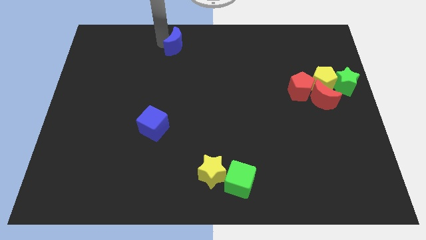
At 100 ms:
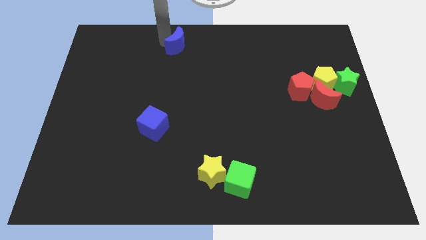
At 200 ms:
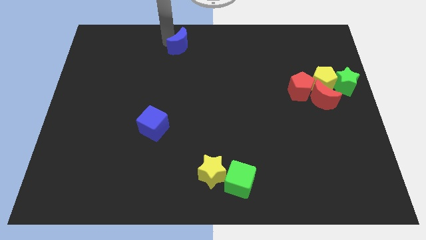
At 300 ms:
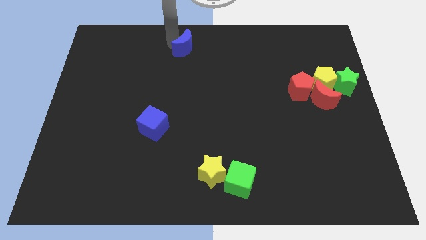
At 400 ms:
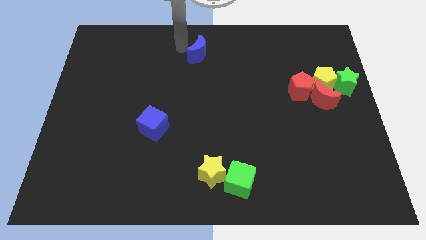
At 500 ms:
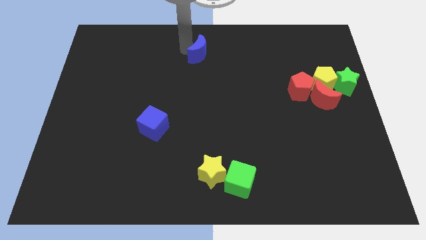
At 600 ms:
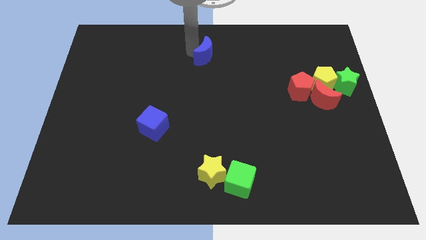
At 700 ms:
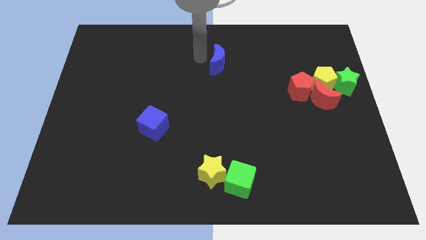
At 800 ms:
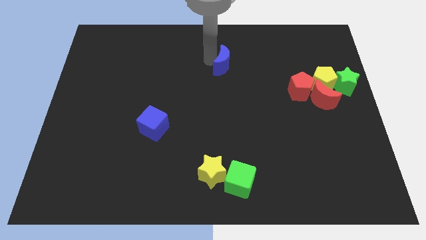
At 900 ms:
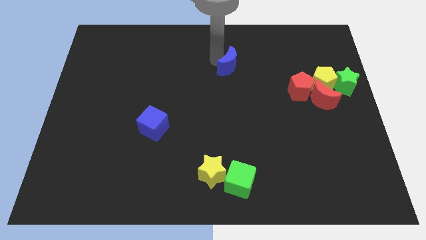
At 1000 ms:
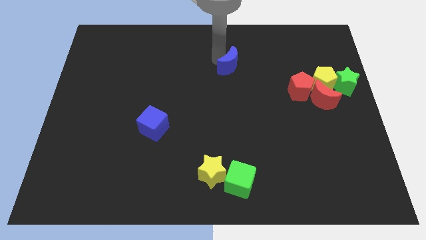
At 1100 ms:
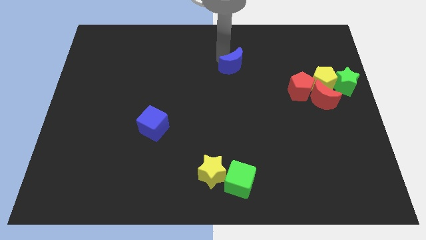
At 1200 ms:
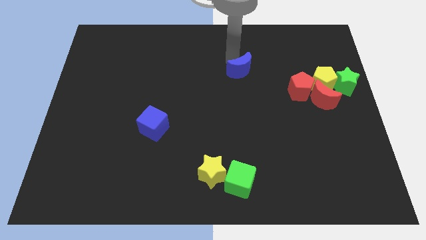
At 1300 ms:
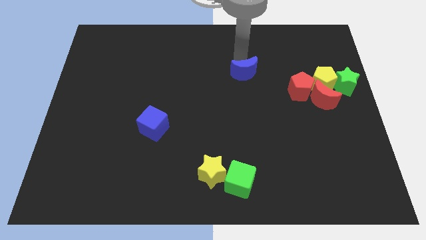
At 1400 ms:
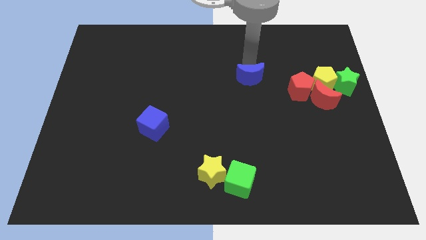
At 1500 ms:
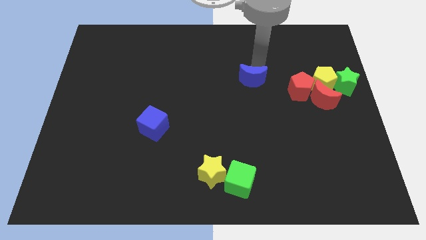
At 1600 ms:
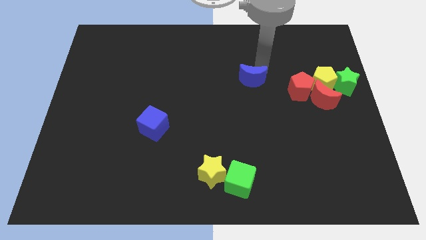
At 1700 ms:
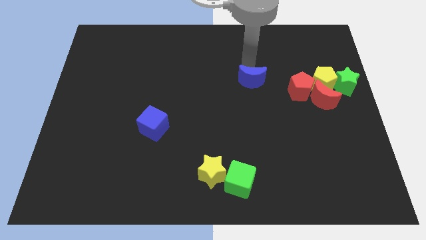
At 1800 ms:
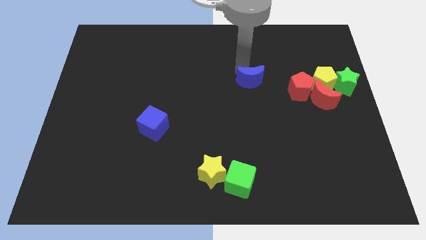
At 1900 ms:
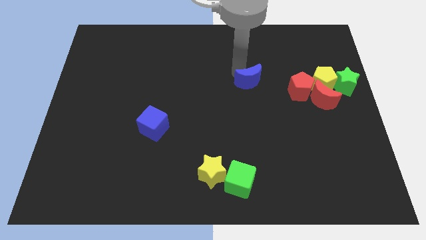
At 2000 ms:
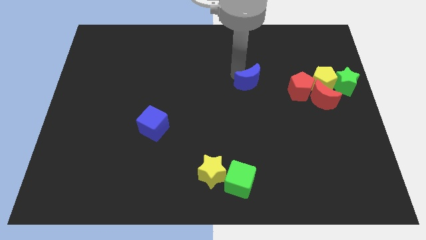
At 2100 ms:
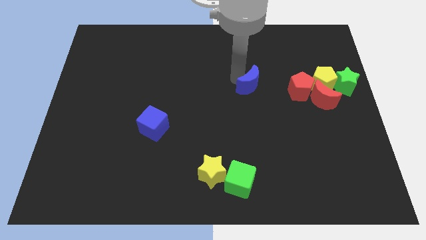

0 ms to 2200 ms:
push blue crescent above green cube

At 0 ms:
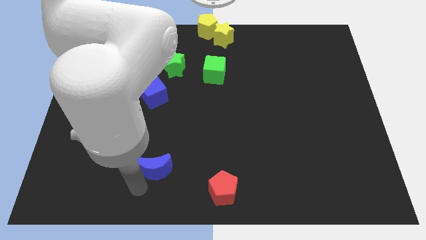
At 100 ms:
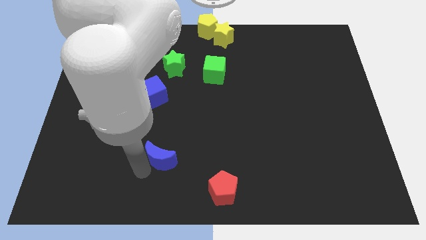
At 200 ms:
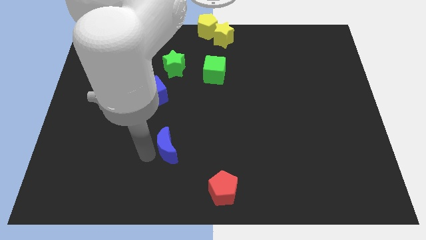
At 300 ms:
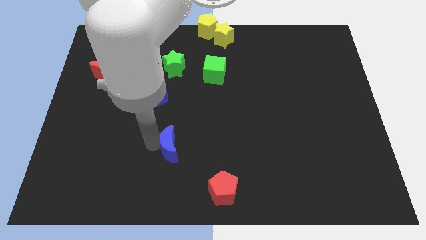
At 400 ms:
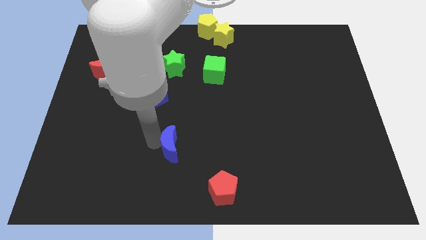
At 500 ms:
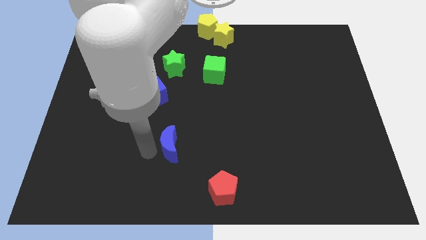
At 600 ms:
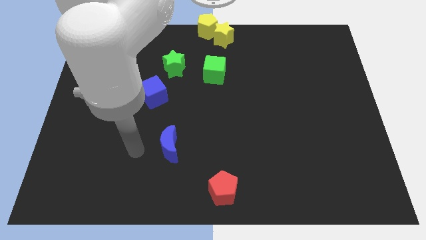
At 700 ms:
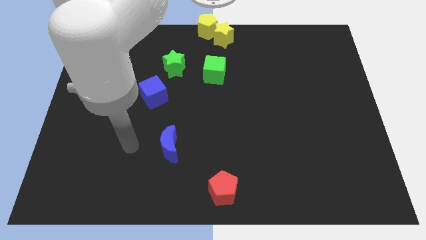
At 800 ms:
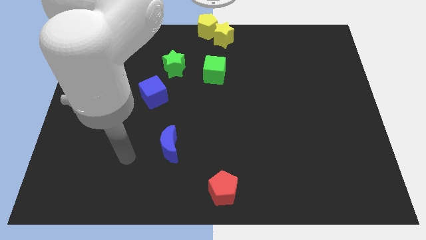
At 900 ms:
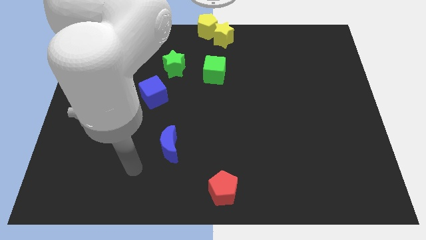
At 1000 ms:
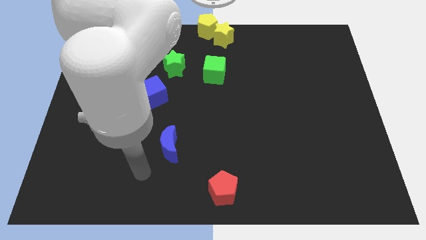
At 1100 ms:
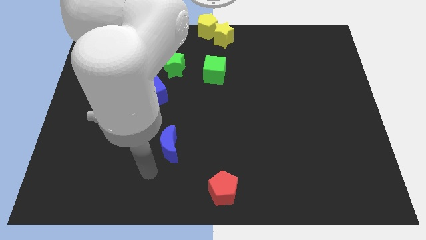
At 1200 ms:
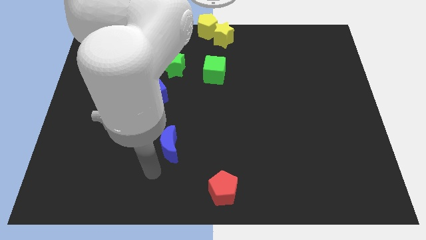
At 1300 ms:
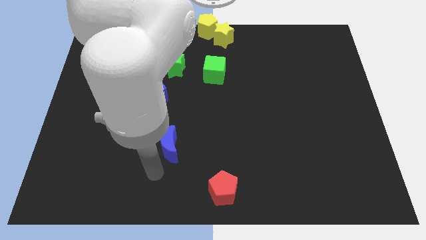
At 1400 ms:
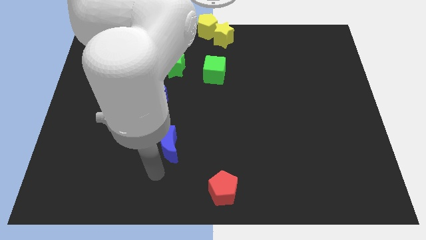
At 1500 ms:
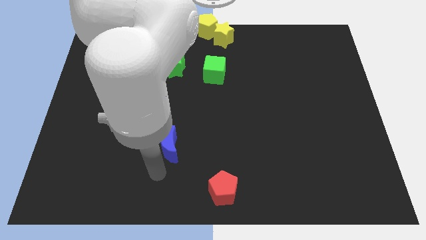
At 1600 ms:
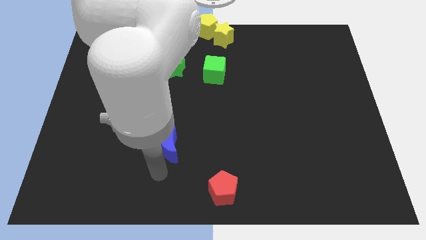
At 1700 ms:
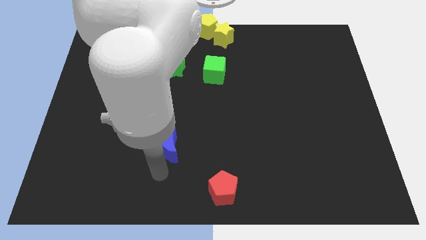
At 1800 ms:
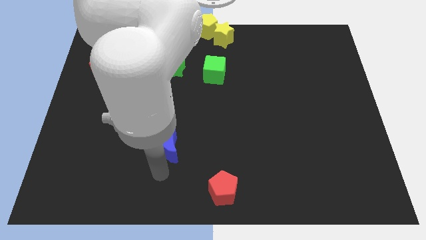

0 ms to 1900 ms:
slide the blue moon diagonally to the top left of the red pentagon

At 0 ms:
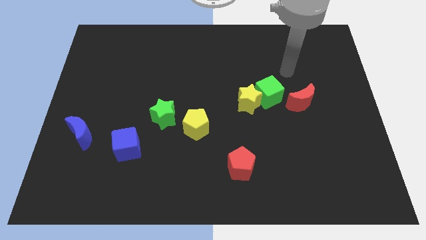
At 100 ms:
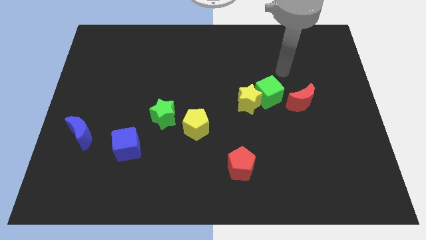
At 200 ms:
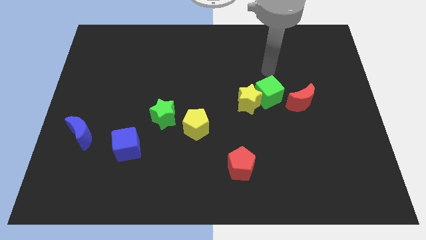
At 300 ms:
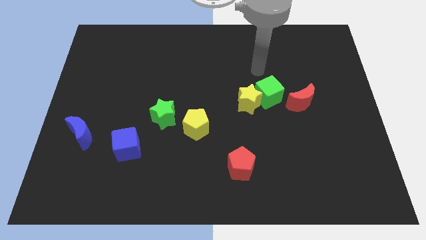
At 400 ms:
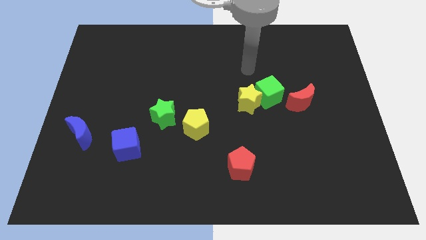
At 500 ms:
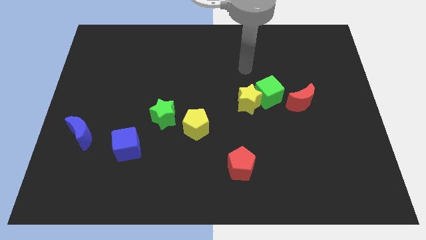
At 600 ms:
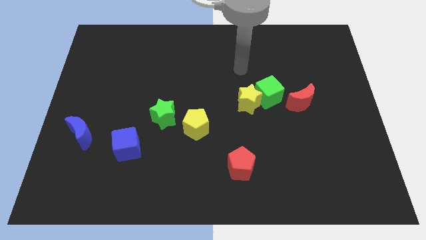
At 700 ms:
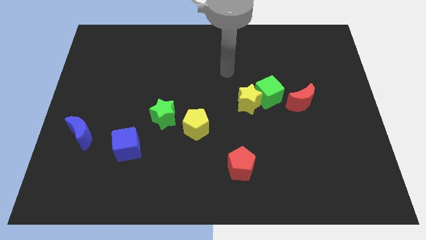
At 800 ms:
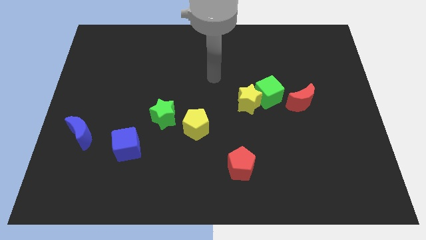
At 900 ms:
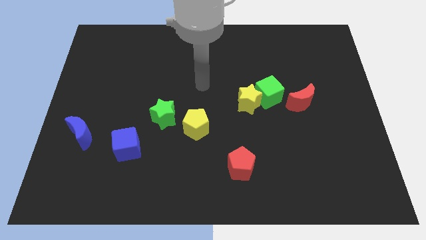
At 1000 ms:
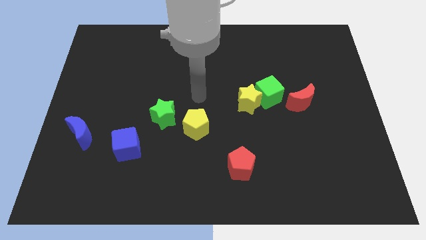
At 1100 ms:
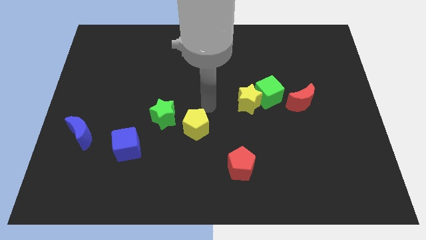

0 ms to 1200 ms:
point the arm at the center of the board

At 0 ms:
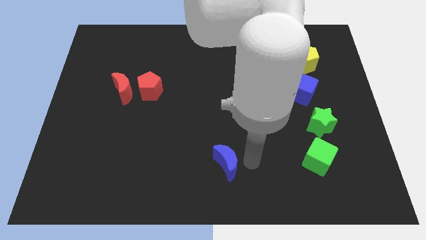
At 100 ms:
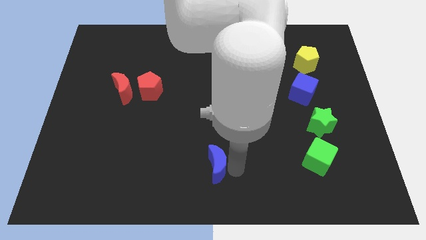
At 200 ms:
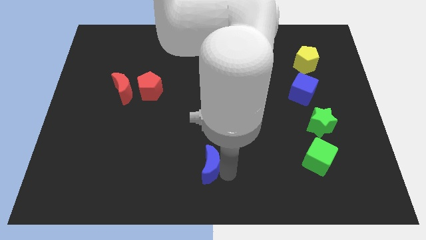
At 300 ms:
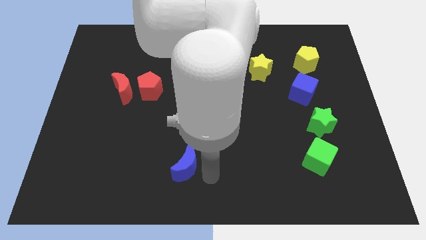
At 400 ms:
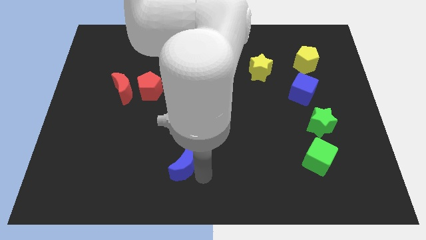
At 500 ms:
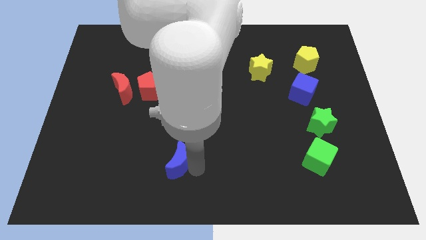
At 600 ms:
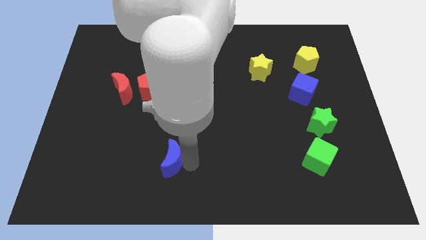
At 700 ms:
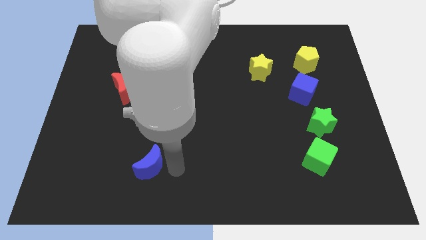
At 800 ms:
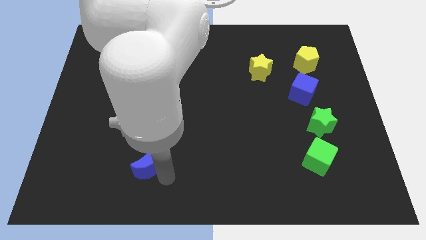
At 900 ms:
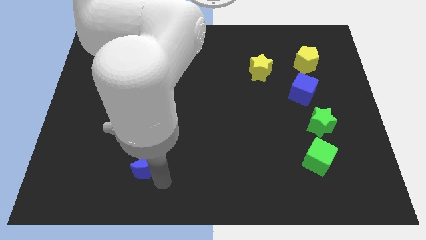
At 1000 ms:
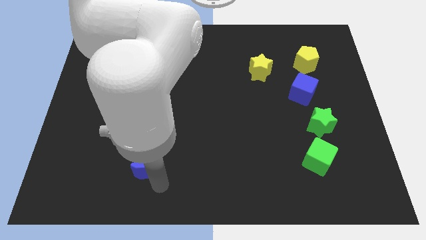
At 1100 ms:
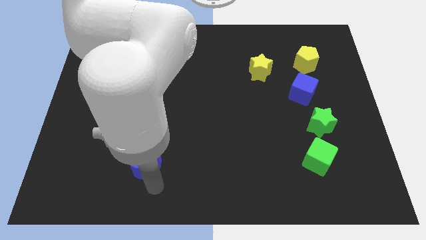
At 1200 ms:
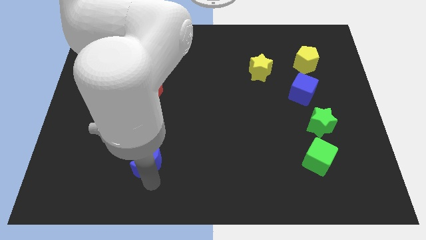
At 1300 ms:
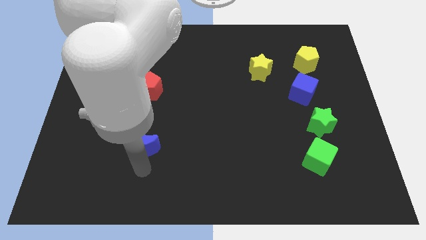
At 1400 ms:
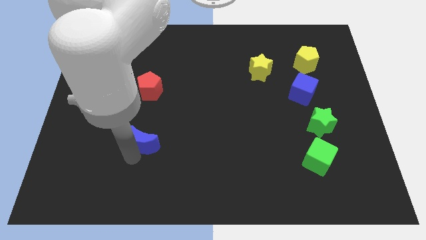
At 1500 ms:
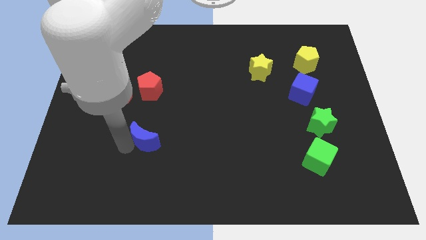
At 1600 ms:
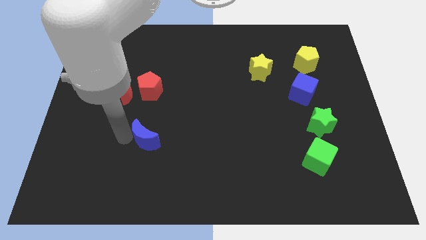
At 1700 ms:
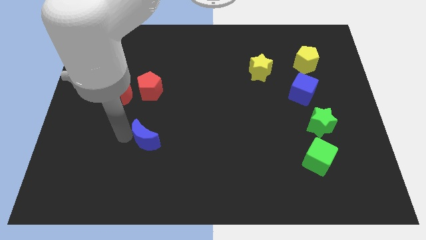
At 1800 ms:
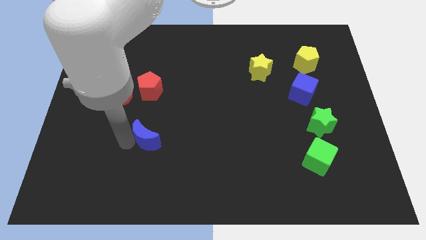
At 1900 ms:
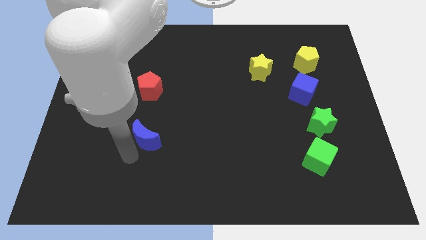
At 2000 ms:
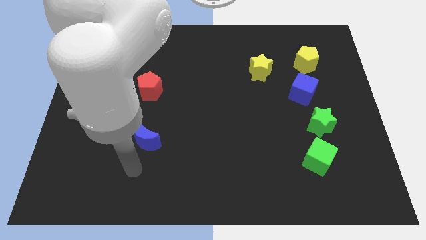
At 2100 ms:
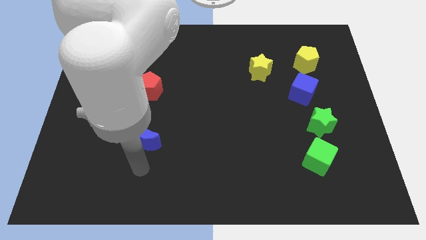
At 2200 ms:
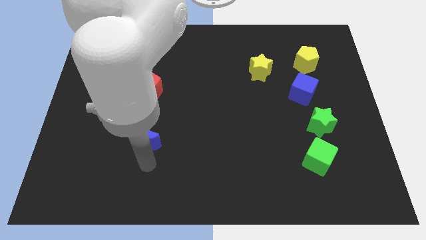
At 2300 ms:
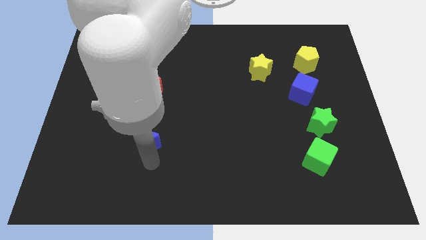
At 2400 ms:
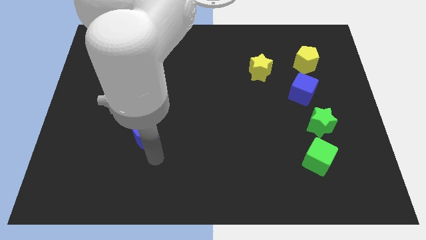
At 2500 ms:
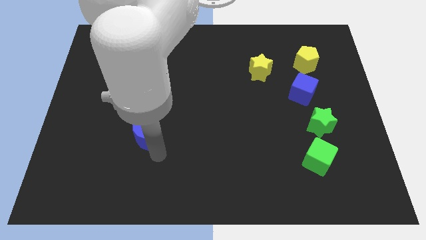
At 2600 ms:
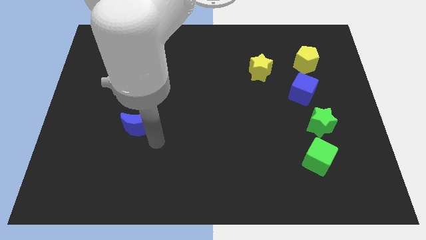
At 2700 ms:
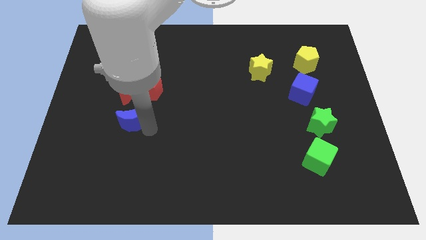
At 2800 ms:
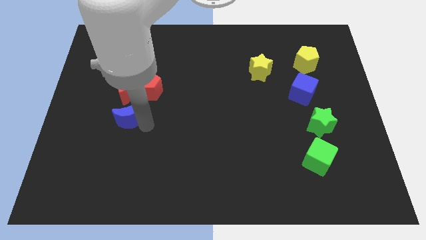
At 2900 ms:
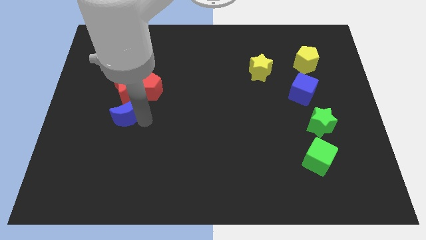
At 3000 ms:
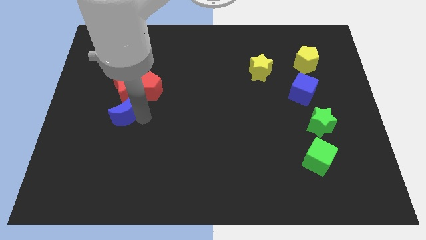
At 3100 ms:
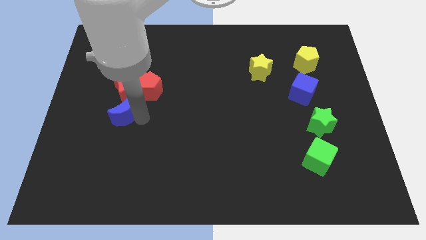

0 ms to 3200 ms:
push blue moon towards red moon

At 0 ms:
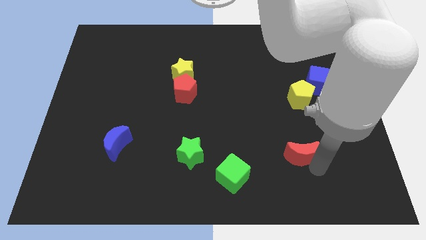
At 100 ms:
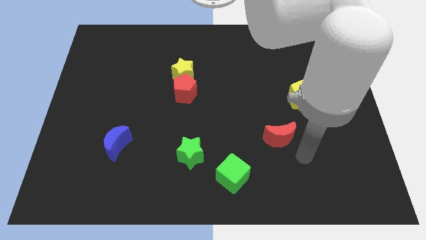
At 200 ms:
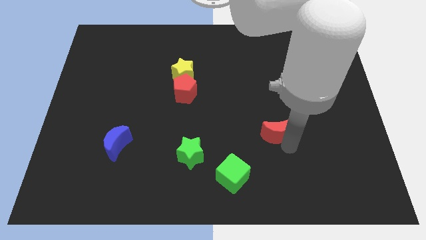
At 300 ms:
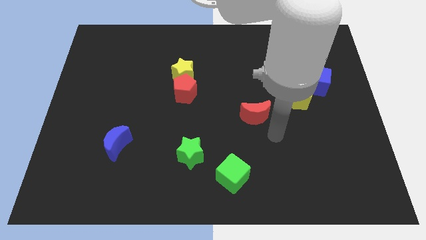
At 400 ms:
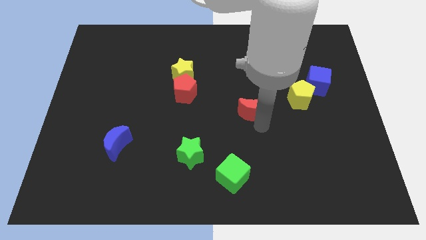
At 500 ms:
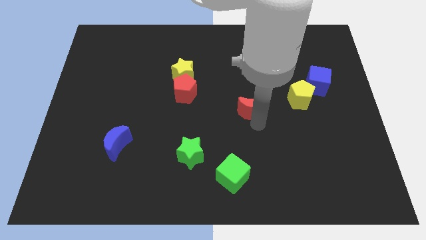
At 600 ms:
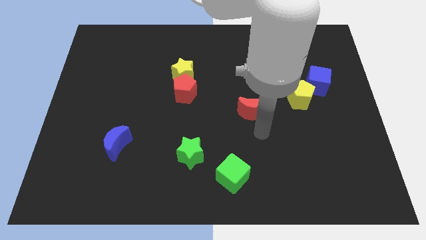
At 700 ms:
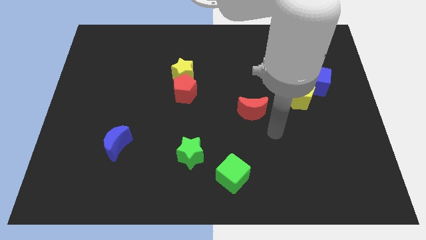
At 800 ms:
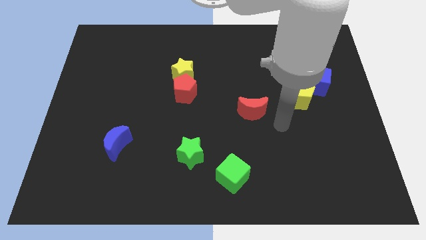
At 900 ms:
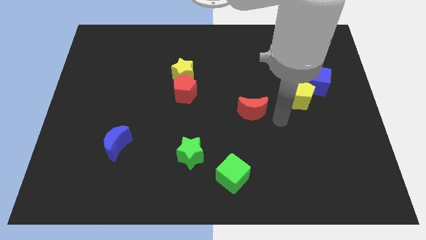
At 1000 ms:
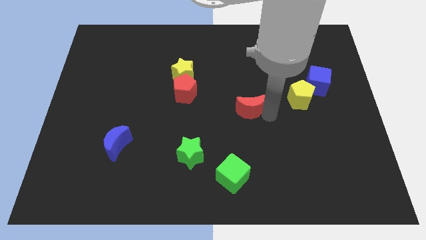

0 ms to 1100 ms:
move red moon up to the left of yellow pentagon
